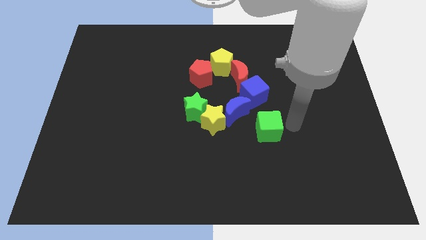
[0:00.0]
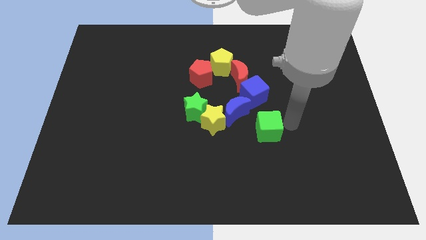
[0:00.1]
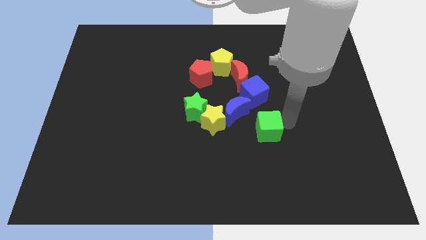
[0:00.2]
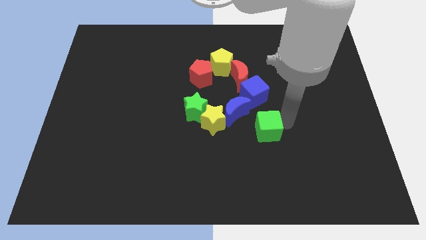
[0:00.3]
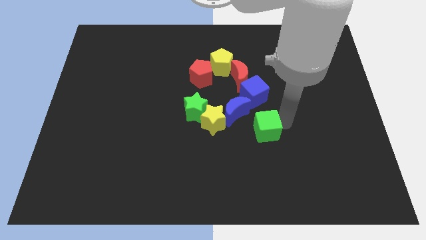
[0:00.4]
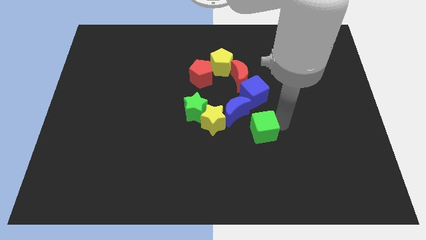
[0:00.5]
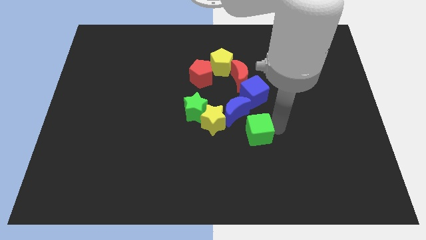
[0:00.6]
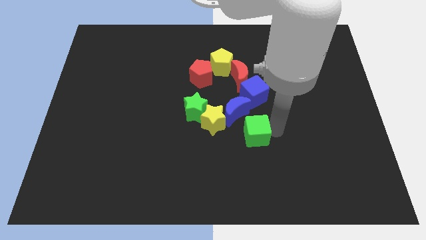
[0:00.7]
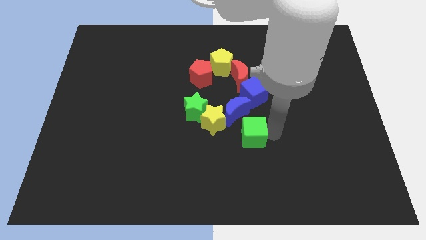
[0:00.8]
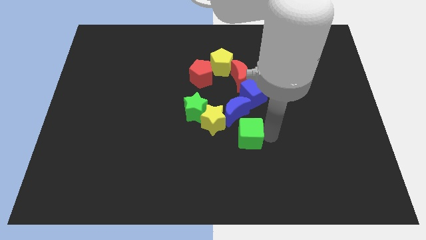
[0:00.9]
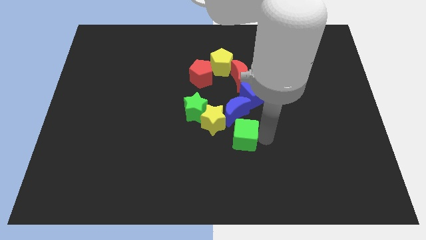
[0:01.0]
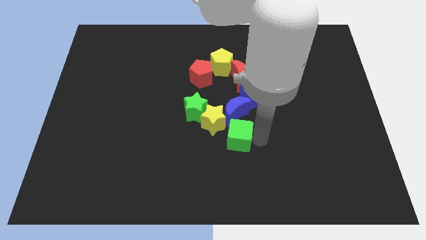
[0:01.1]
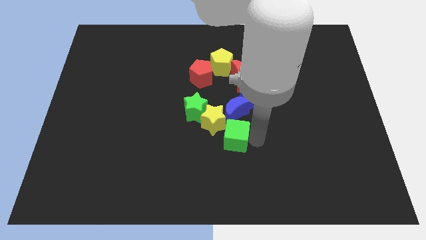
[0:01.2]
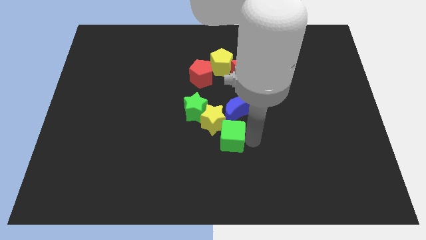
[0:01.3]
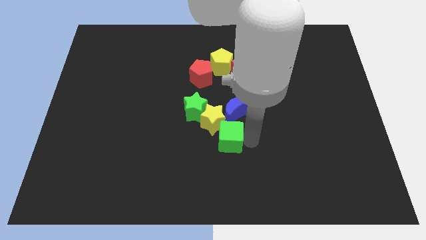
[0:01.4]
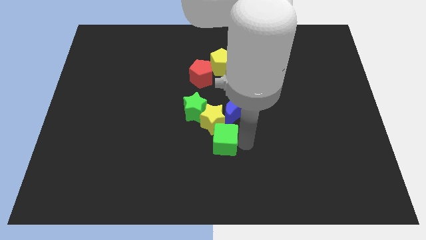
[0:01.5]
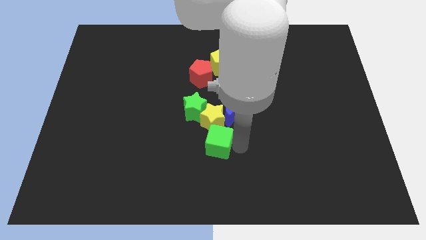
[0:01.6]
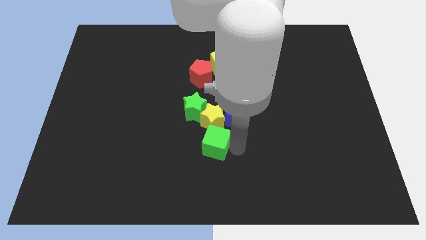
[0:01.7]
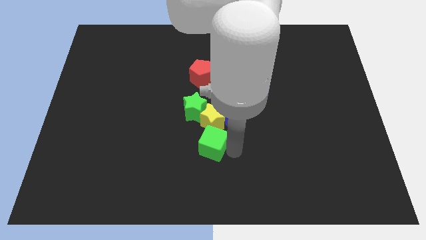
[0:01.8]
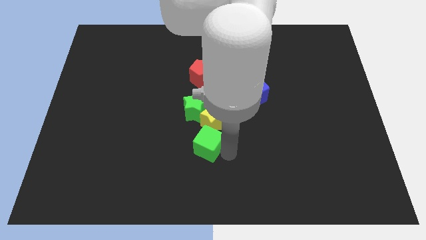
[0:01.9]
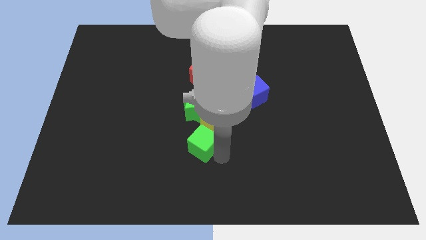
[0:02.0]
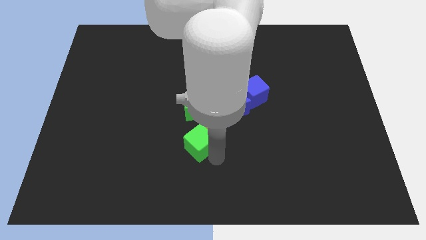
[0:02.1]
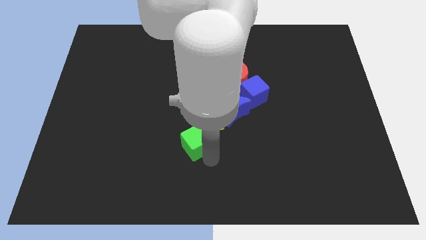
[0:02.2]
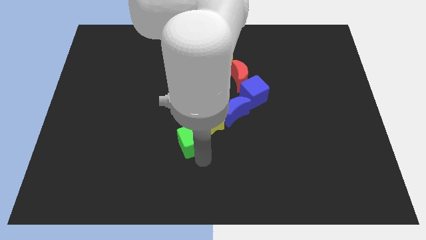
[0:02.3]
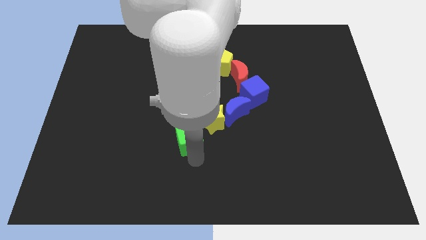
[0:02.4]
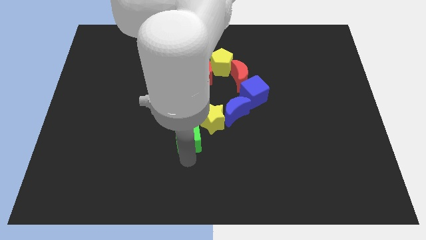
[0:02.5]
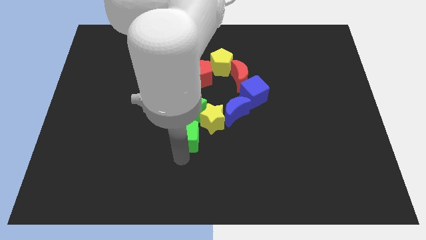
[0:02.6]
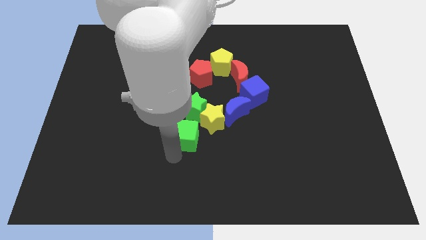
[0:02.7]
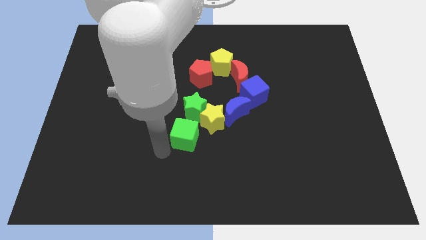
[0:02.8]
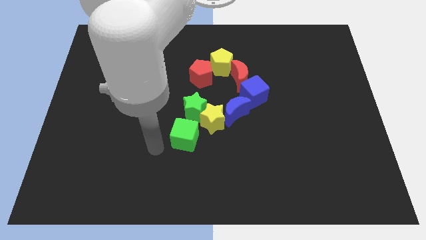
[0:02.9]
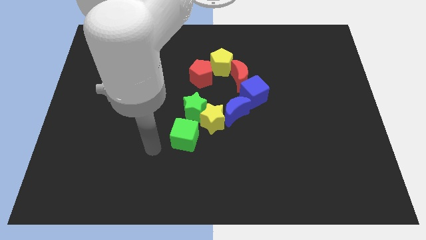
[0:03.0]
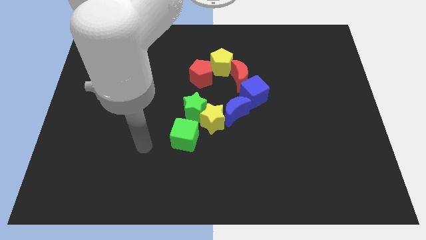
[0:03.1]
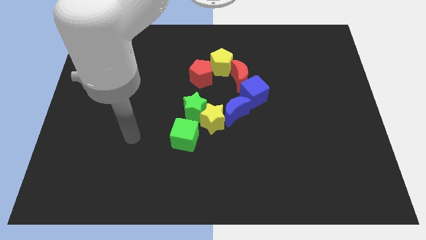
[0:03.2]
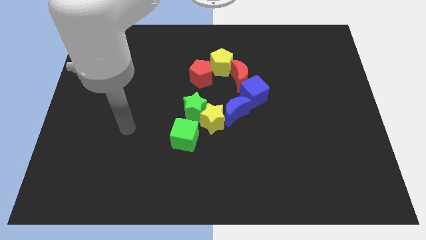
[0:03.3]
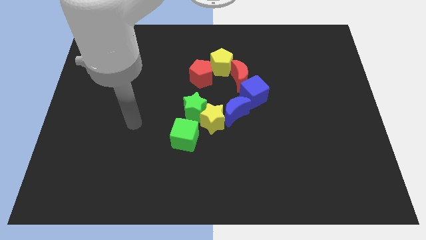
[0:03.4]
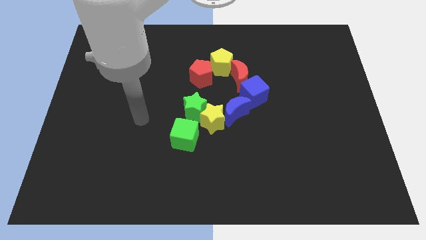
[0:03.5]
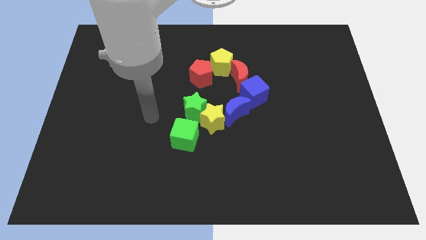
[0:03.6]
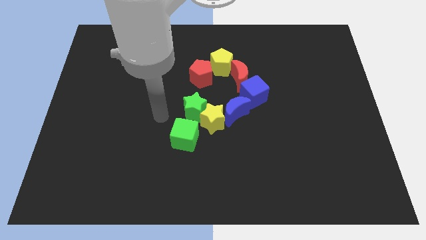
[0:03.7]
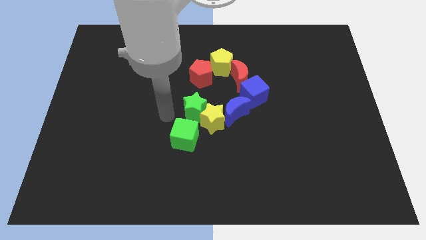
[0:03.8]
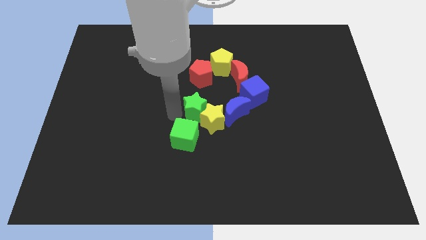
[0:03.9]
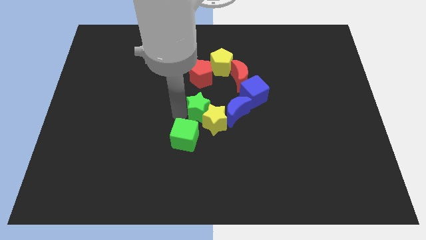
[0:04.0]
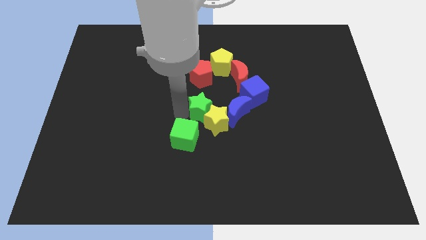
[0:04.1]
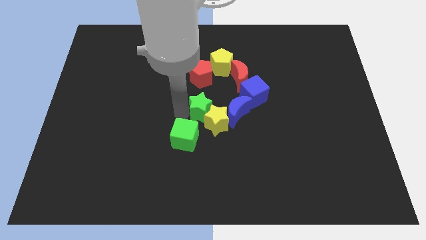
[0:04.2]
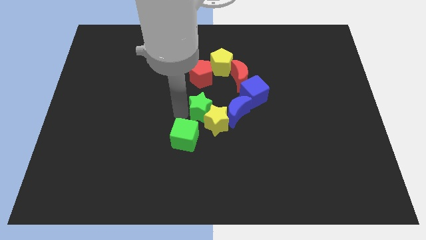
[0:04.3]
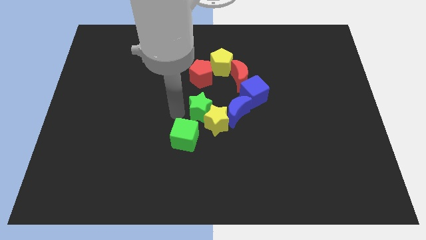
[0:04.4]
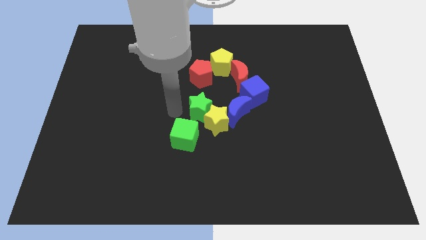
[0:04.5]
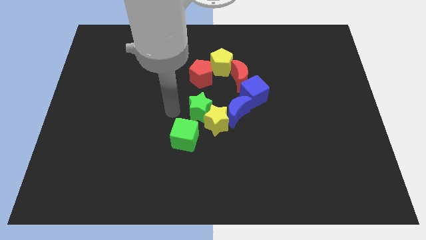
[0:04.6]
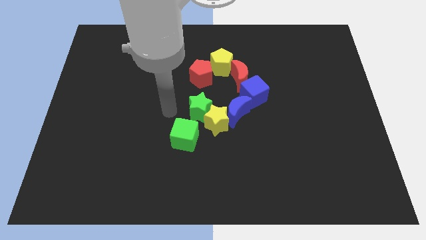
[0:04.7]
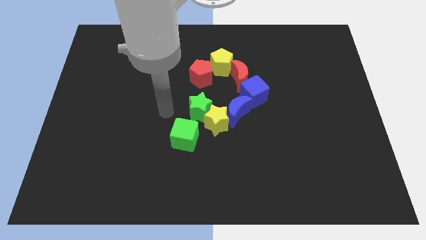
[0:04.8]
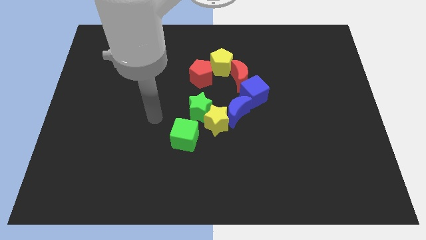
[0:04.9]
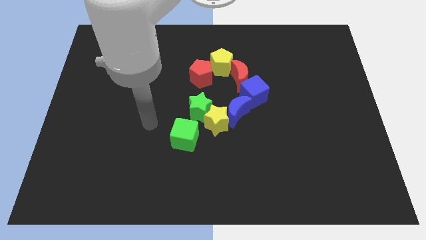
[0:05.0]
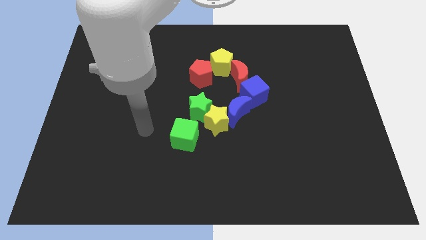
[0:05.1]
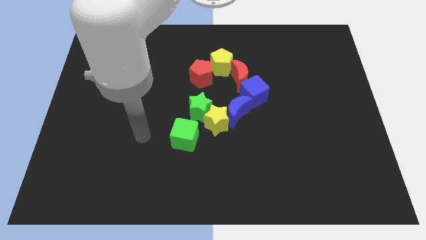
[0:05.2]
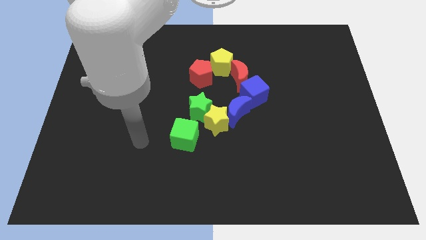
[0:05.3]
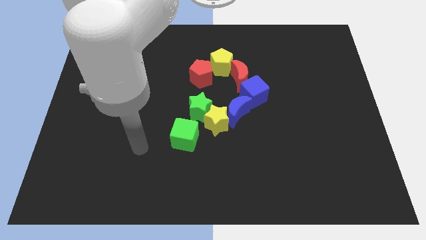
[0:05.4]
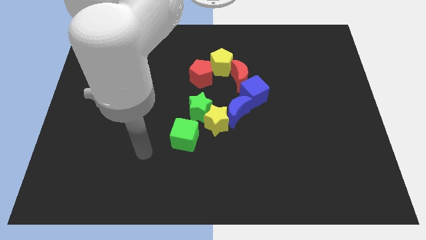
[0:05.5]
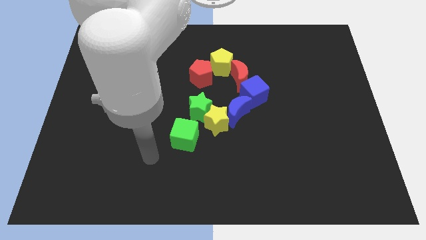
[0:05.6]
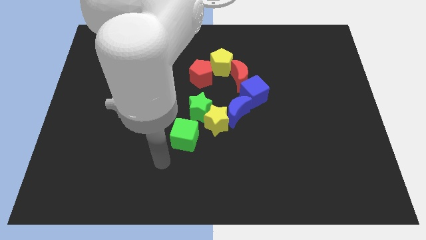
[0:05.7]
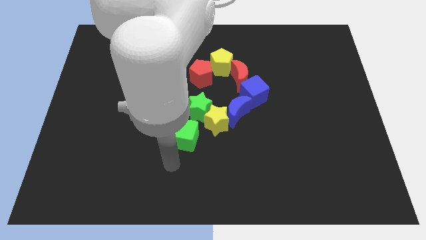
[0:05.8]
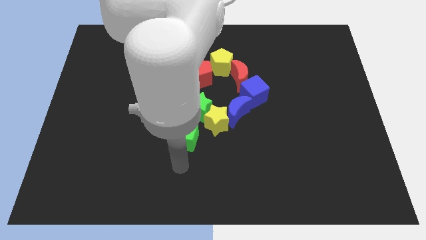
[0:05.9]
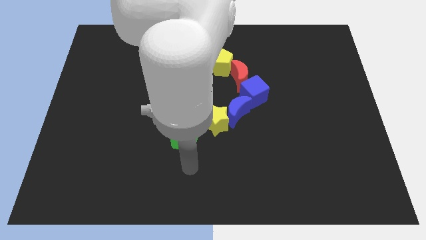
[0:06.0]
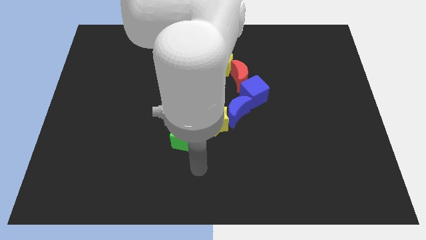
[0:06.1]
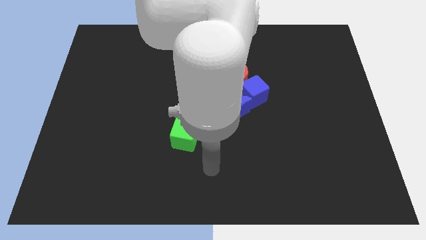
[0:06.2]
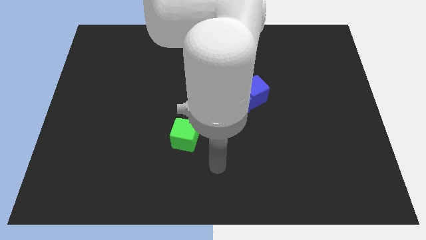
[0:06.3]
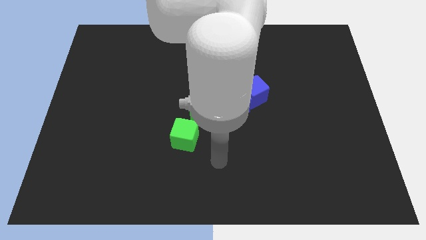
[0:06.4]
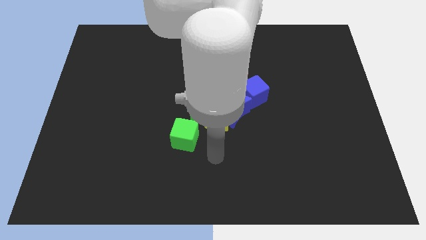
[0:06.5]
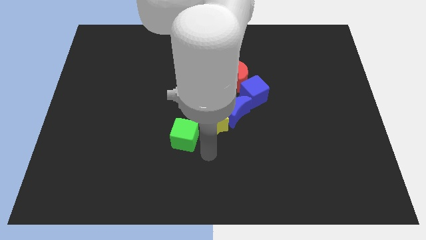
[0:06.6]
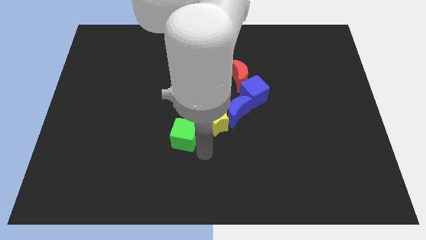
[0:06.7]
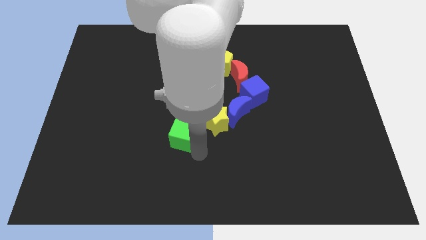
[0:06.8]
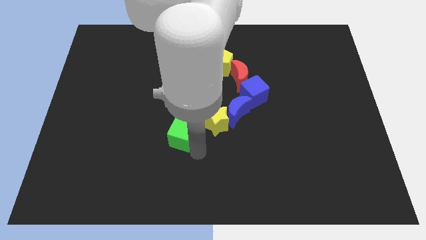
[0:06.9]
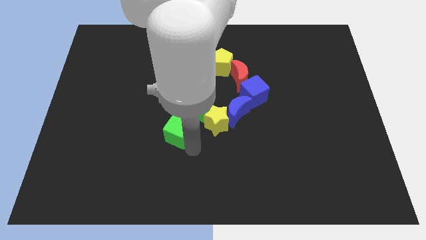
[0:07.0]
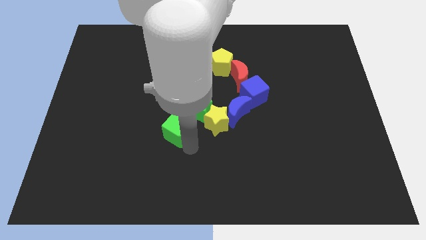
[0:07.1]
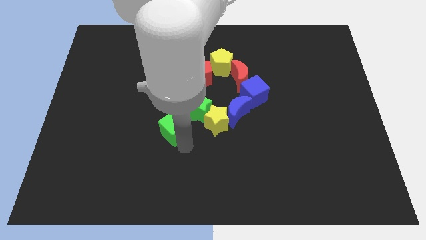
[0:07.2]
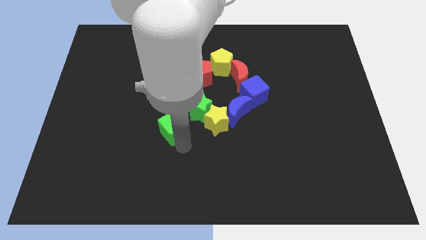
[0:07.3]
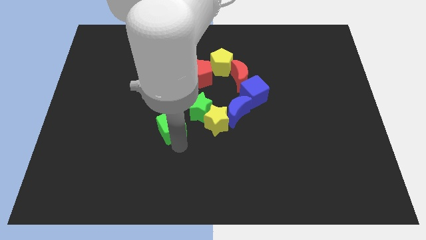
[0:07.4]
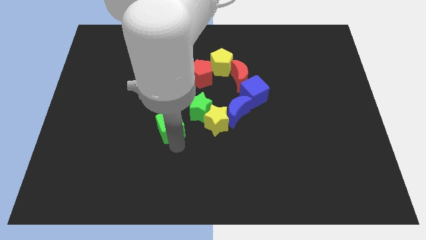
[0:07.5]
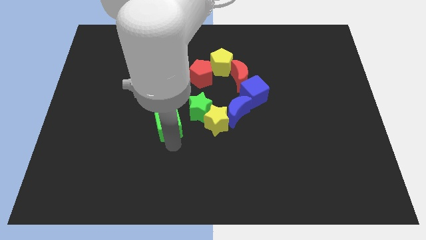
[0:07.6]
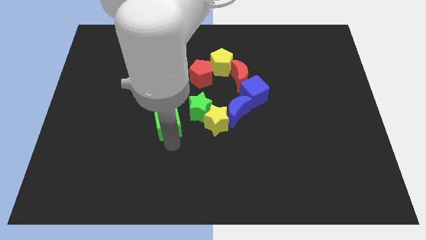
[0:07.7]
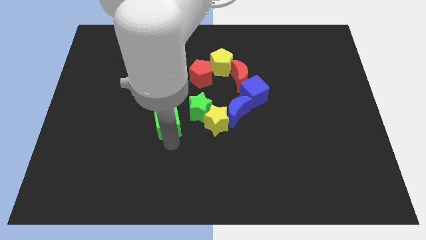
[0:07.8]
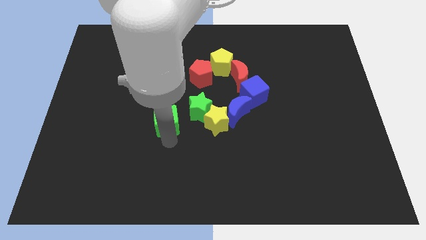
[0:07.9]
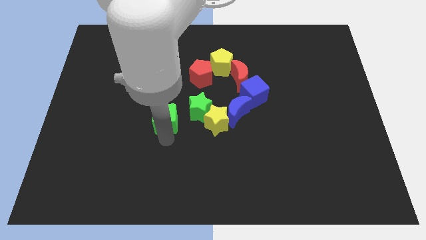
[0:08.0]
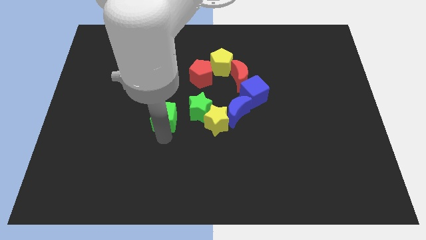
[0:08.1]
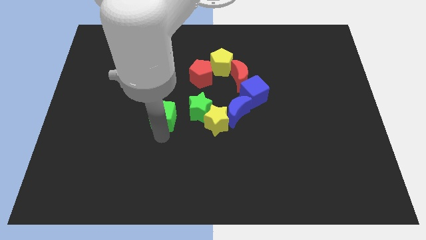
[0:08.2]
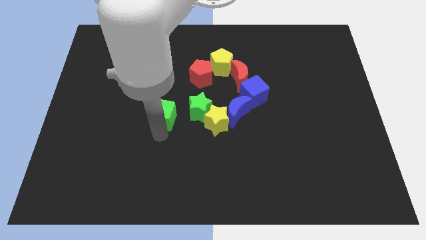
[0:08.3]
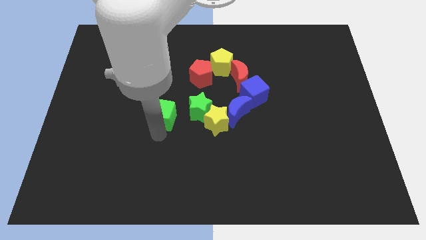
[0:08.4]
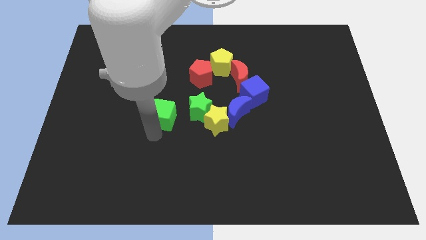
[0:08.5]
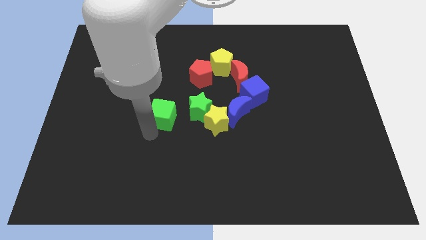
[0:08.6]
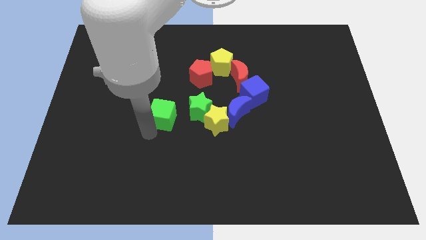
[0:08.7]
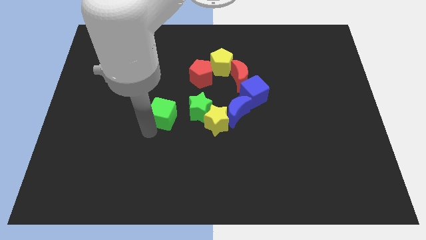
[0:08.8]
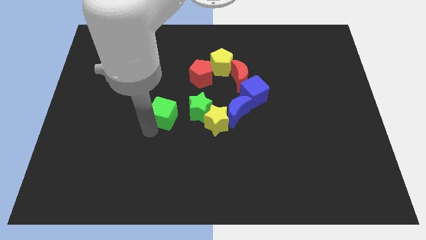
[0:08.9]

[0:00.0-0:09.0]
move the green cube to the left of the green star

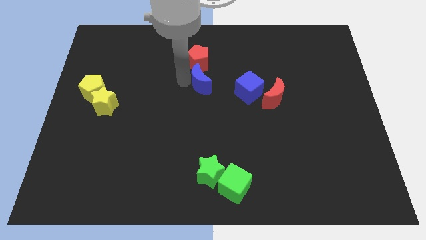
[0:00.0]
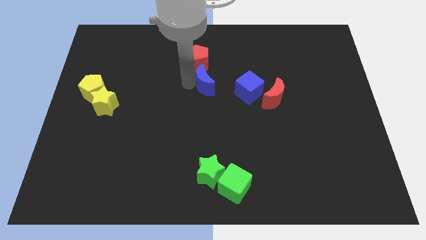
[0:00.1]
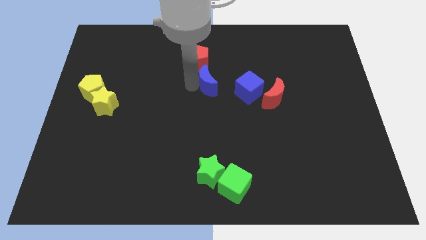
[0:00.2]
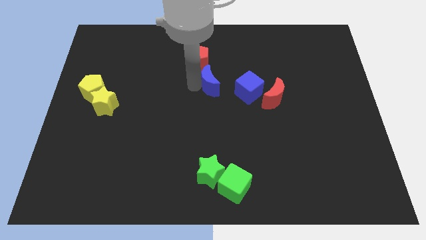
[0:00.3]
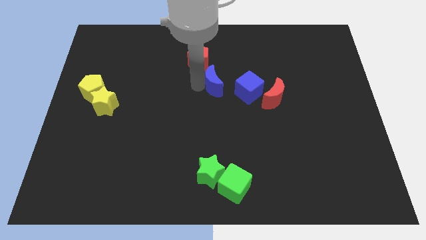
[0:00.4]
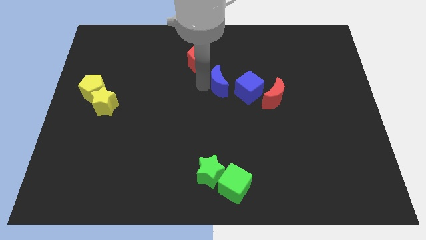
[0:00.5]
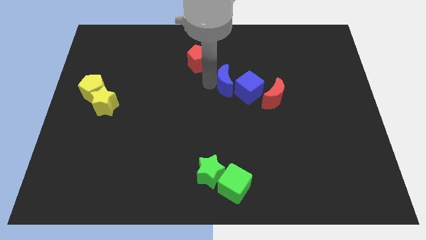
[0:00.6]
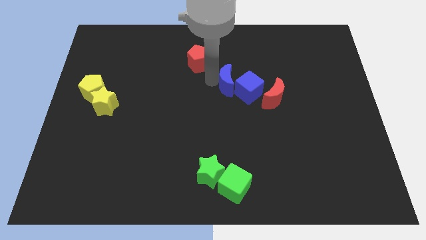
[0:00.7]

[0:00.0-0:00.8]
move the blue crescent close to the left of the blue cube
